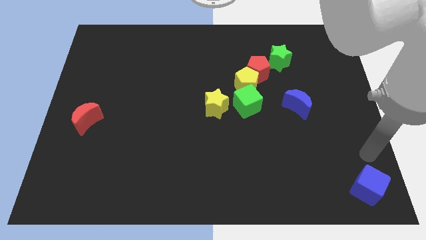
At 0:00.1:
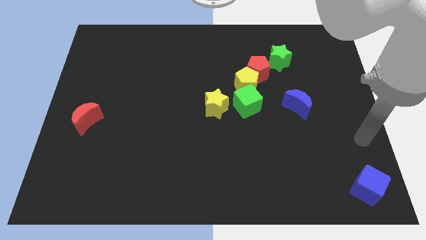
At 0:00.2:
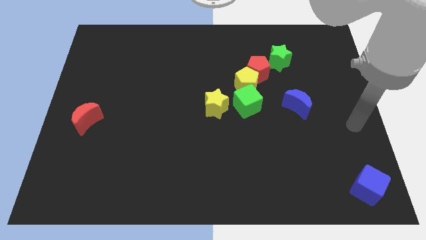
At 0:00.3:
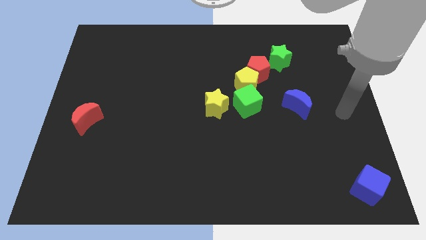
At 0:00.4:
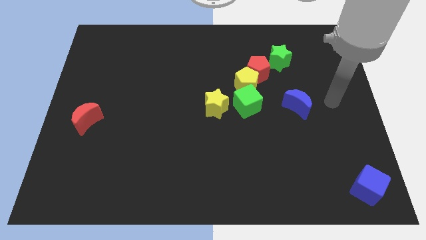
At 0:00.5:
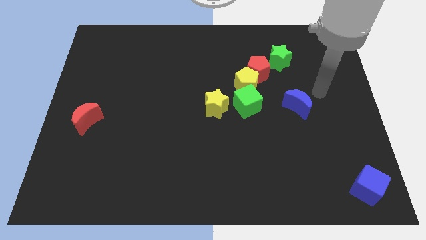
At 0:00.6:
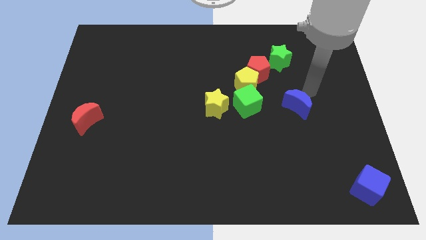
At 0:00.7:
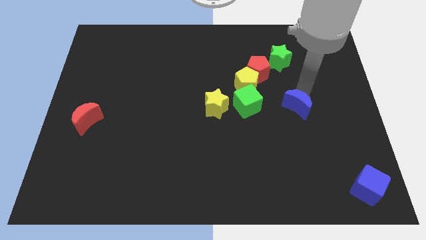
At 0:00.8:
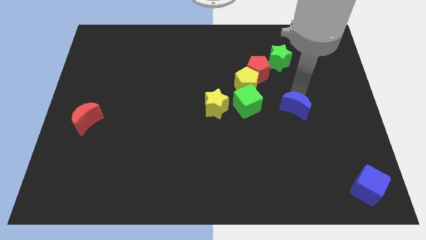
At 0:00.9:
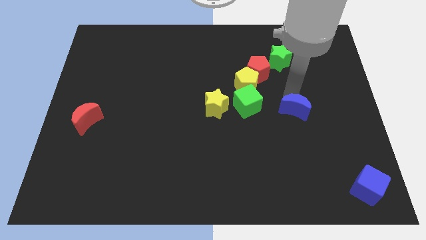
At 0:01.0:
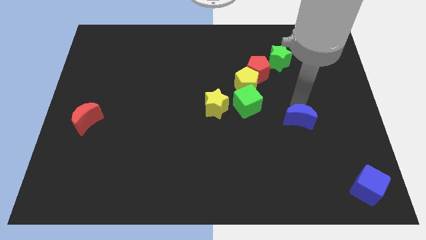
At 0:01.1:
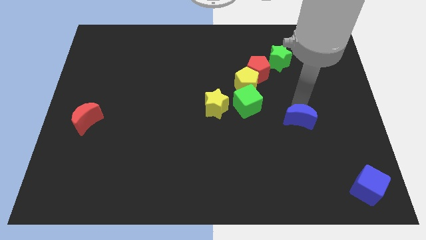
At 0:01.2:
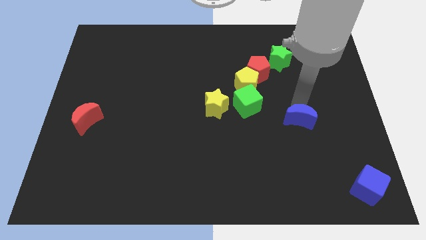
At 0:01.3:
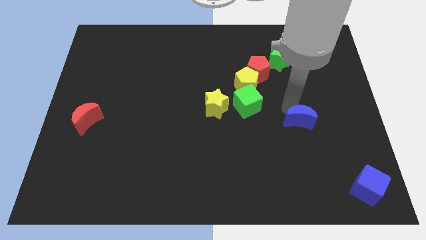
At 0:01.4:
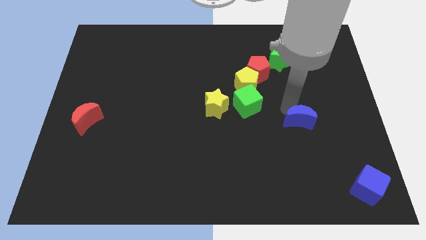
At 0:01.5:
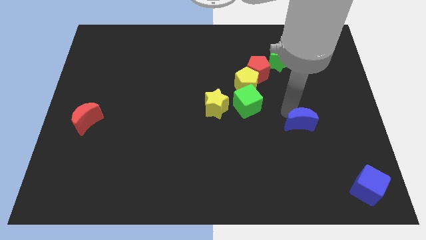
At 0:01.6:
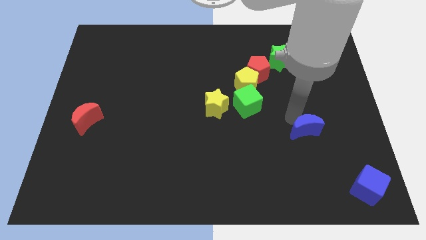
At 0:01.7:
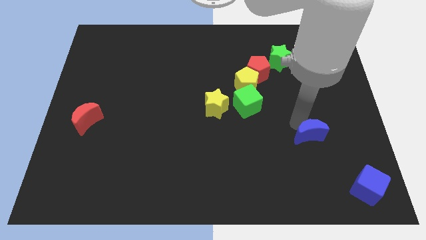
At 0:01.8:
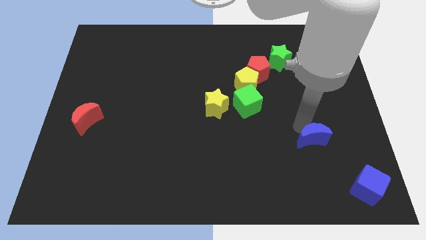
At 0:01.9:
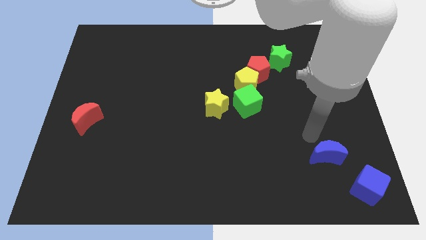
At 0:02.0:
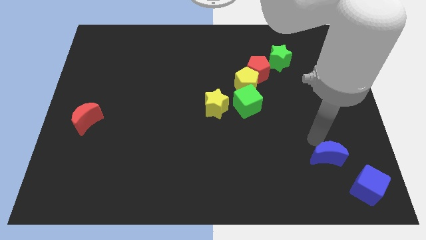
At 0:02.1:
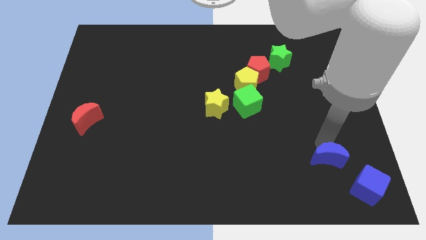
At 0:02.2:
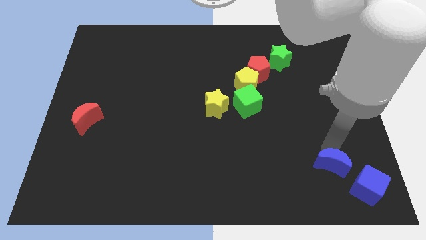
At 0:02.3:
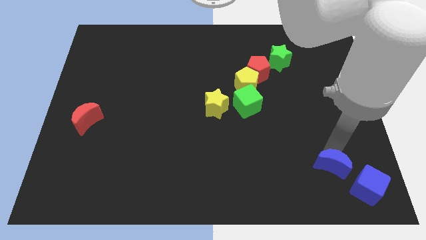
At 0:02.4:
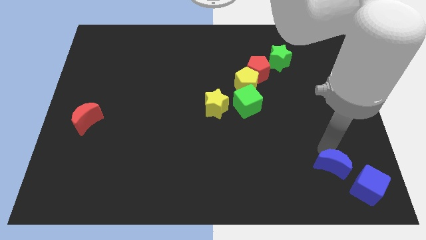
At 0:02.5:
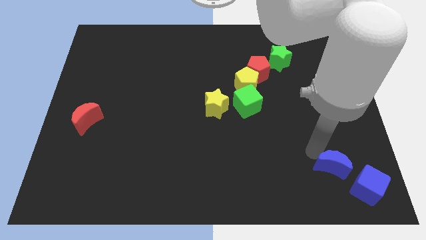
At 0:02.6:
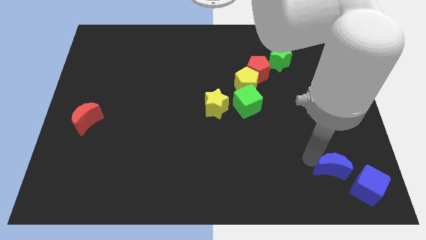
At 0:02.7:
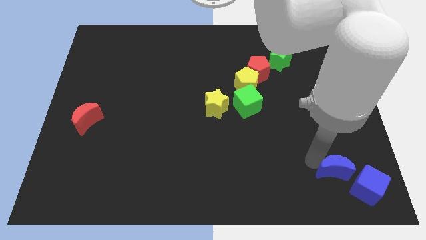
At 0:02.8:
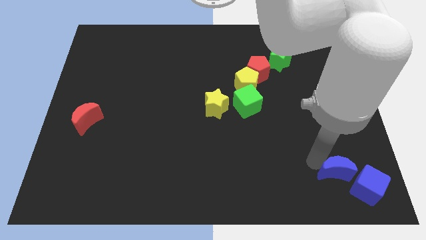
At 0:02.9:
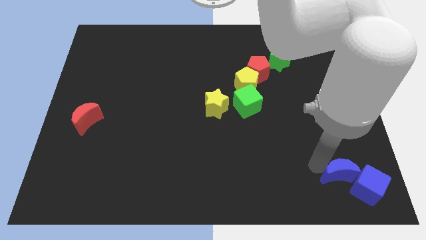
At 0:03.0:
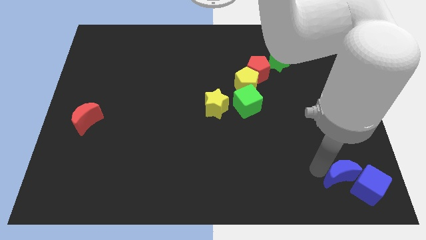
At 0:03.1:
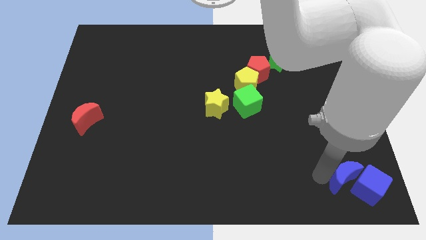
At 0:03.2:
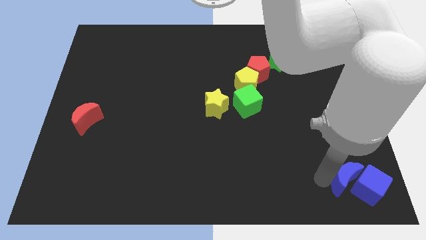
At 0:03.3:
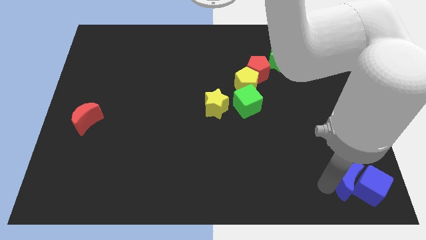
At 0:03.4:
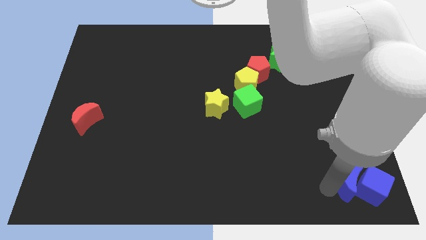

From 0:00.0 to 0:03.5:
drag the blue crescent into the left side of the blue cube

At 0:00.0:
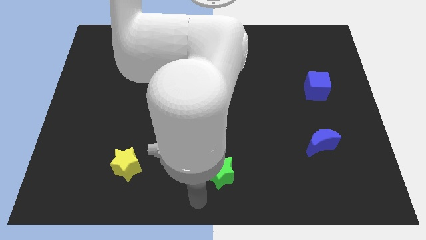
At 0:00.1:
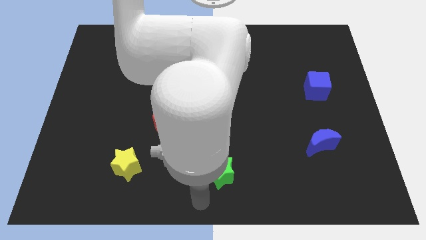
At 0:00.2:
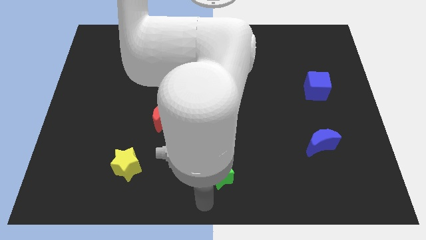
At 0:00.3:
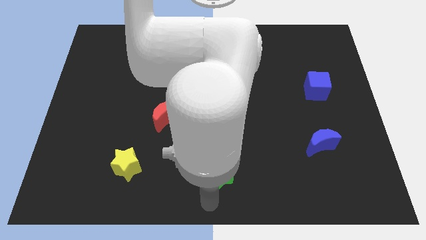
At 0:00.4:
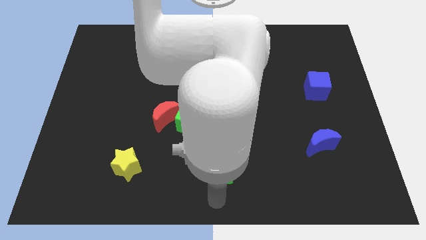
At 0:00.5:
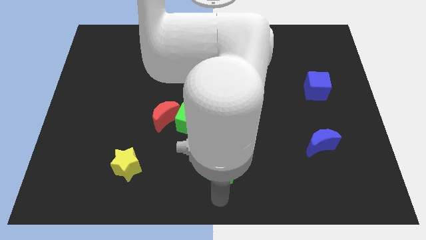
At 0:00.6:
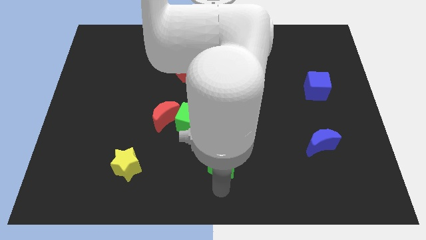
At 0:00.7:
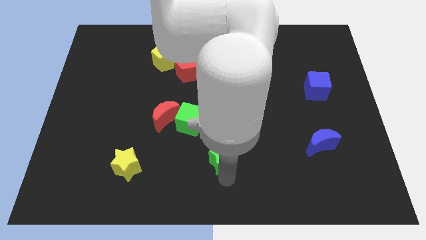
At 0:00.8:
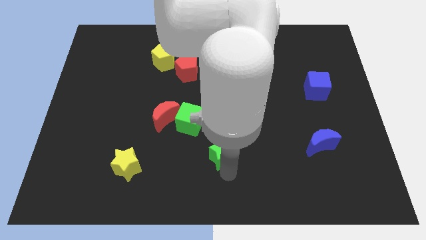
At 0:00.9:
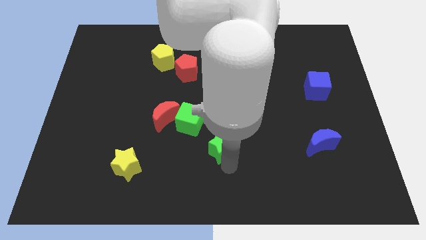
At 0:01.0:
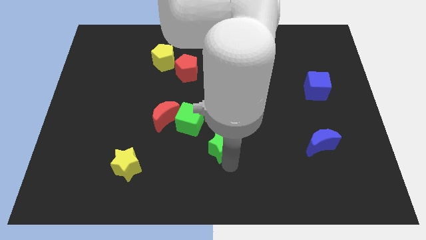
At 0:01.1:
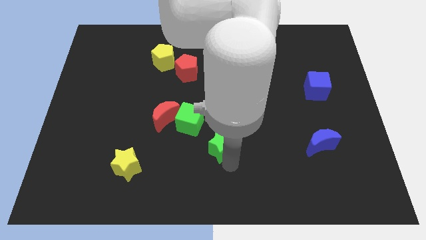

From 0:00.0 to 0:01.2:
touch the bottom of green star

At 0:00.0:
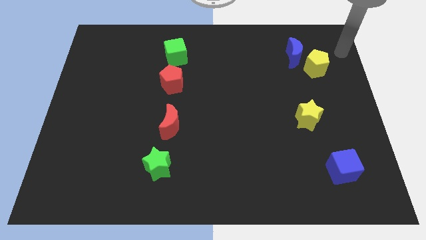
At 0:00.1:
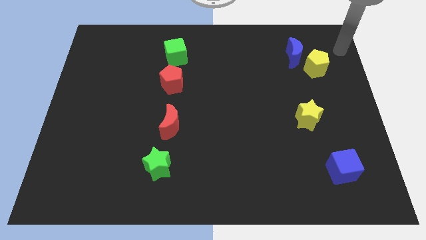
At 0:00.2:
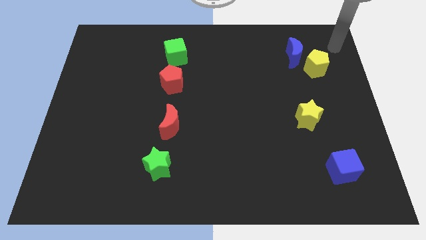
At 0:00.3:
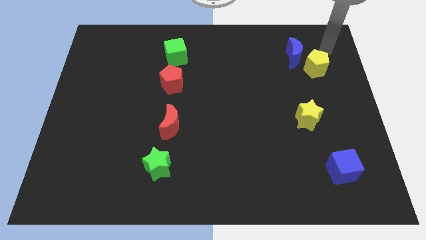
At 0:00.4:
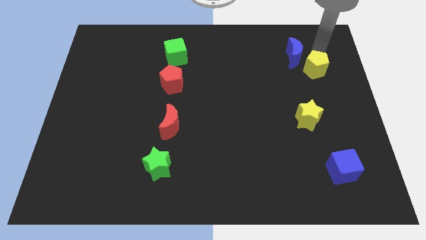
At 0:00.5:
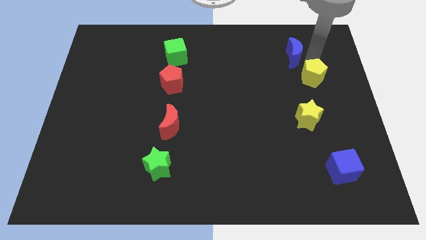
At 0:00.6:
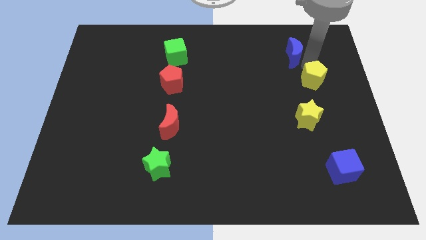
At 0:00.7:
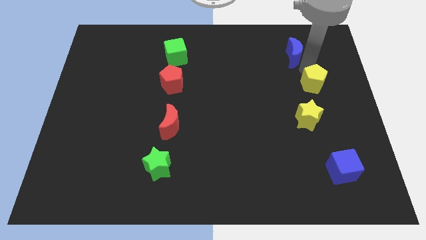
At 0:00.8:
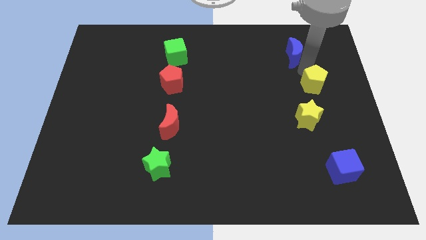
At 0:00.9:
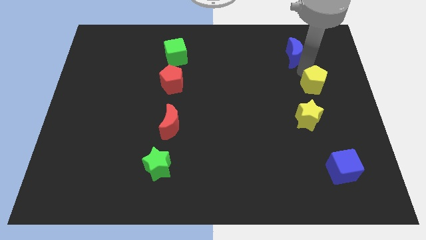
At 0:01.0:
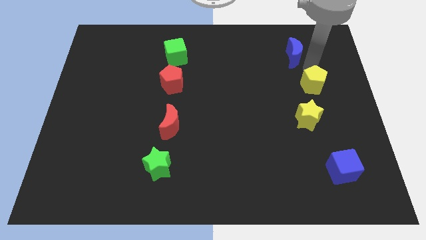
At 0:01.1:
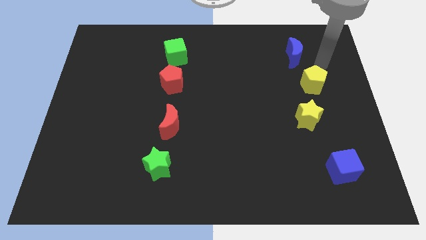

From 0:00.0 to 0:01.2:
push the yellow pentagon towards the bottom side of the board

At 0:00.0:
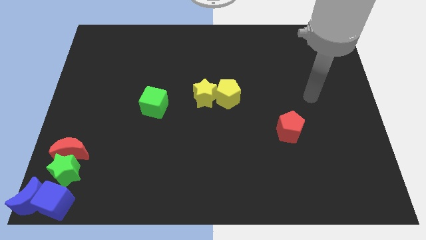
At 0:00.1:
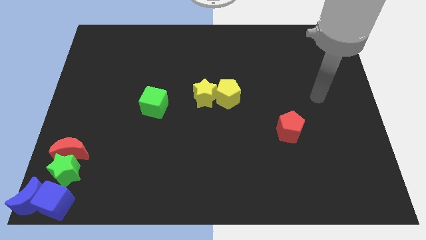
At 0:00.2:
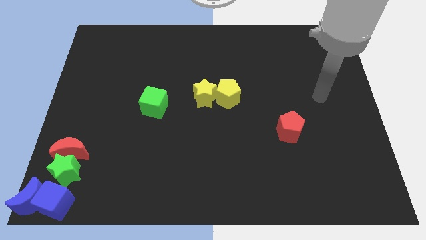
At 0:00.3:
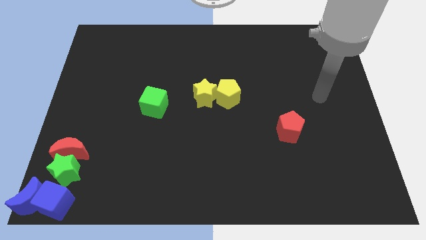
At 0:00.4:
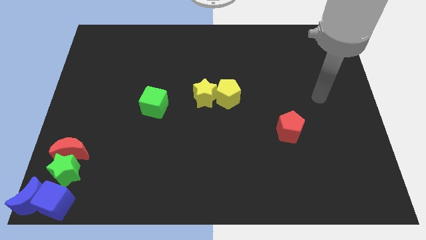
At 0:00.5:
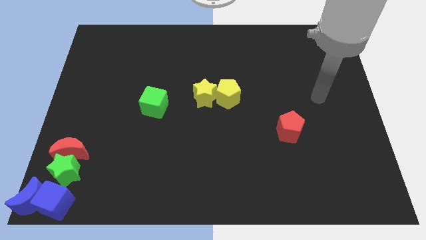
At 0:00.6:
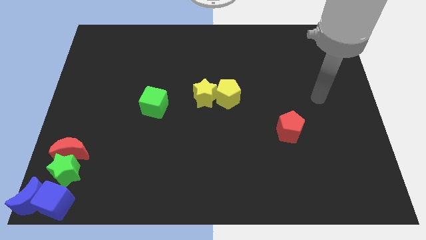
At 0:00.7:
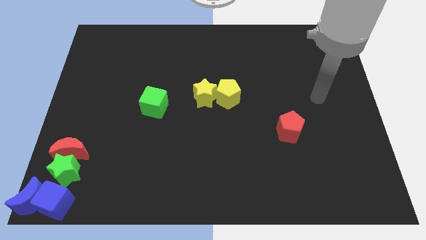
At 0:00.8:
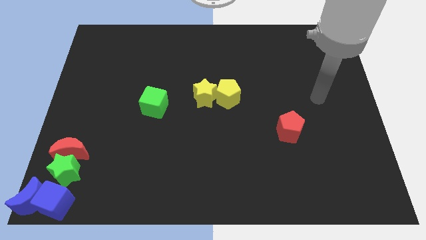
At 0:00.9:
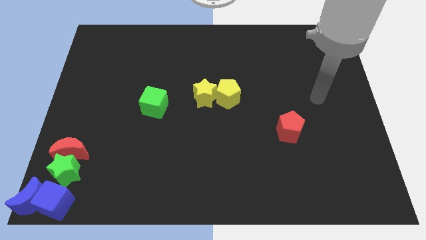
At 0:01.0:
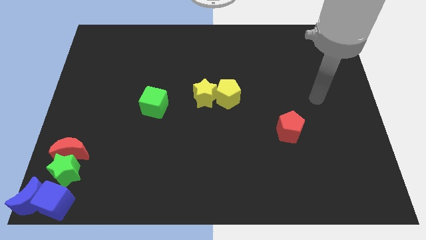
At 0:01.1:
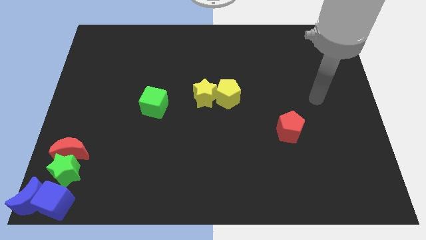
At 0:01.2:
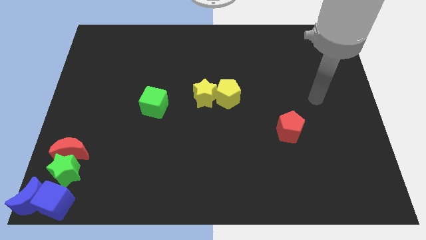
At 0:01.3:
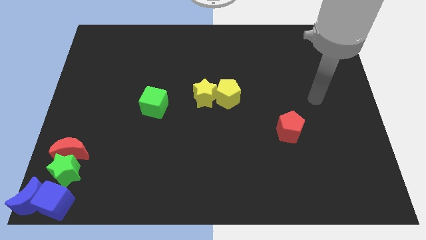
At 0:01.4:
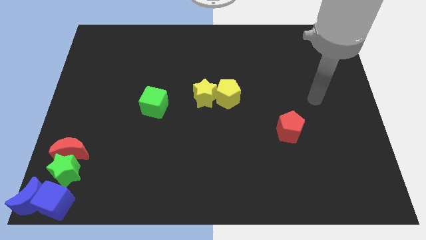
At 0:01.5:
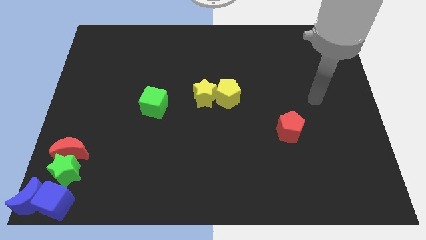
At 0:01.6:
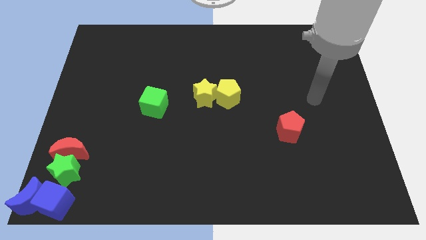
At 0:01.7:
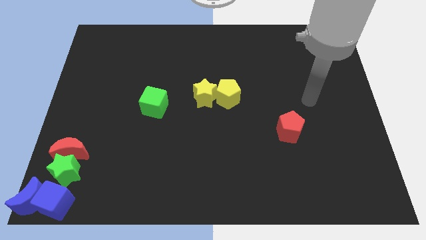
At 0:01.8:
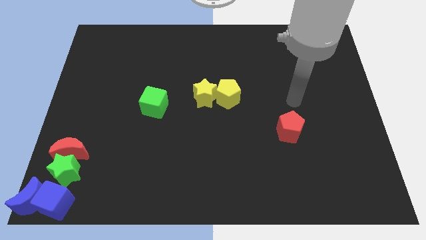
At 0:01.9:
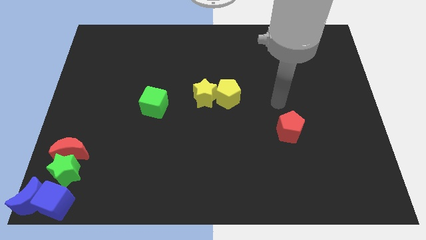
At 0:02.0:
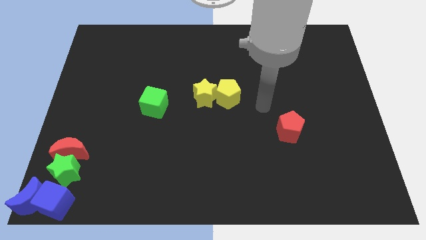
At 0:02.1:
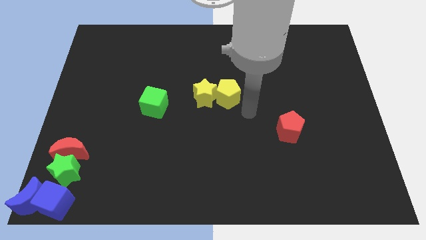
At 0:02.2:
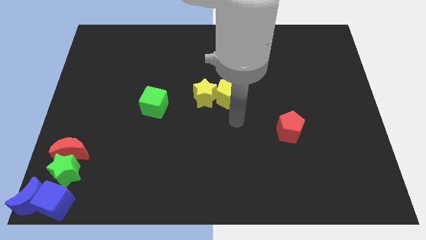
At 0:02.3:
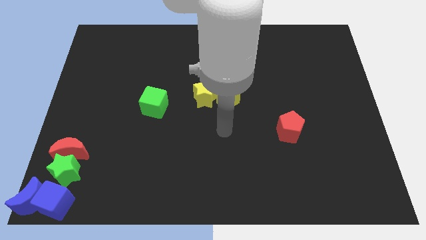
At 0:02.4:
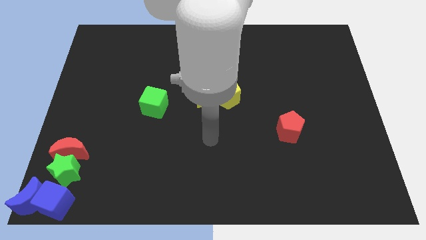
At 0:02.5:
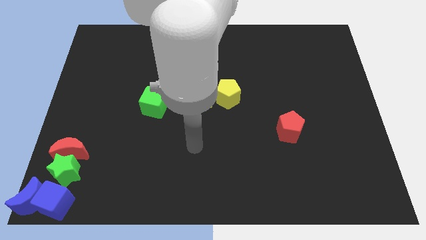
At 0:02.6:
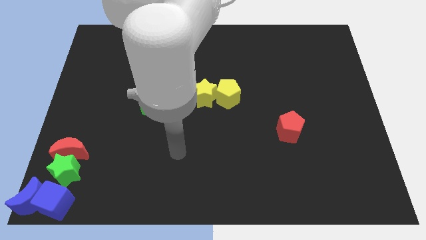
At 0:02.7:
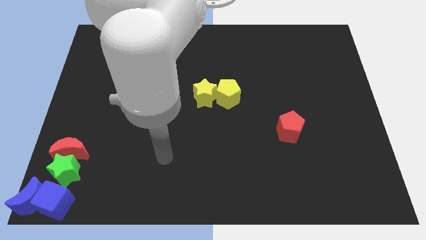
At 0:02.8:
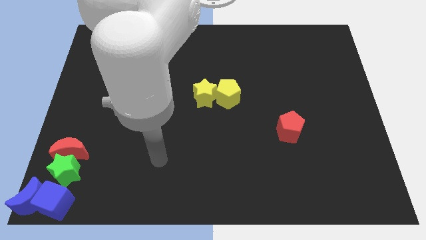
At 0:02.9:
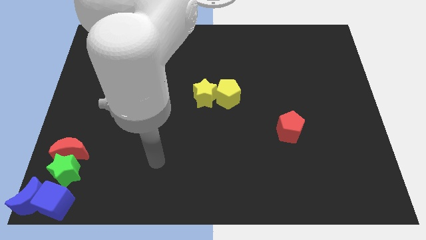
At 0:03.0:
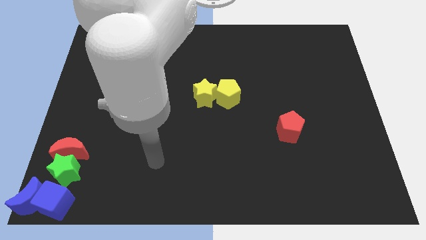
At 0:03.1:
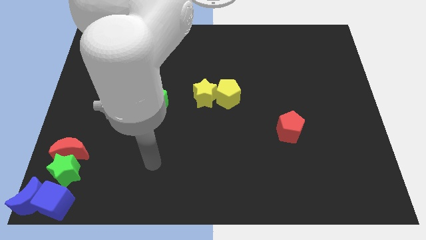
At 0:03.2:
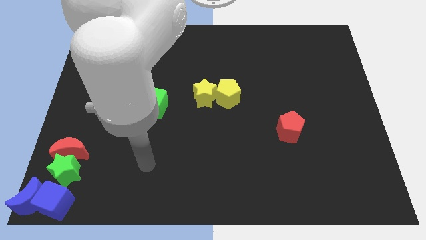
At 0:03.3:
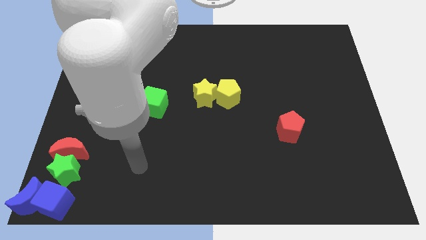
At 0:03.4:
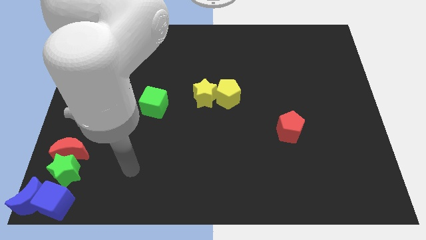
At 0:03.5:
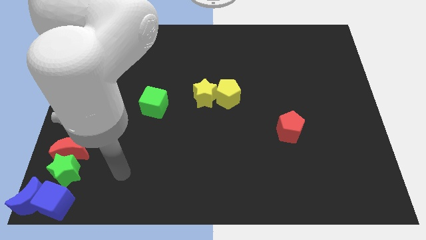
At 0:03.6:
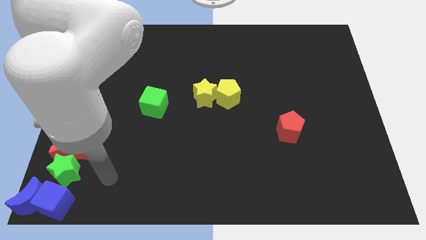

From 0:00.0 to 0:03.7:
move your arm to the right of the green star
